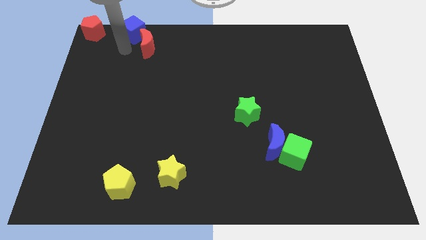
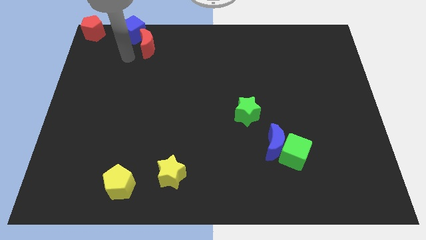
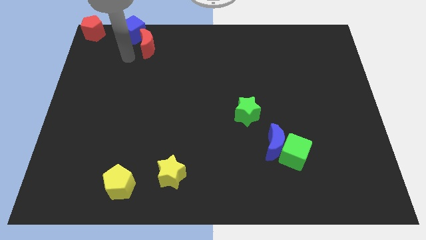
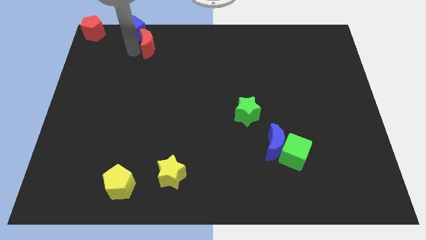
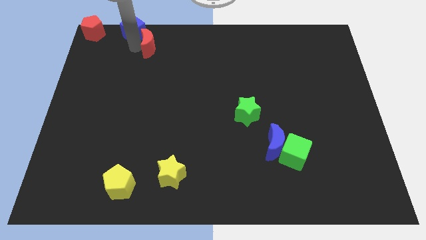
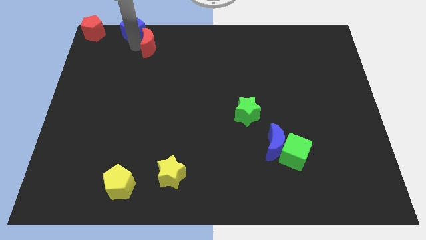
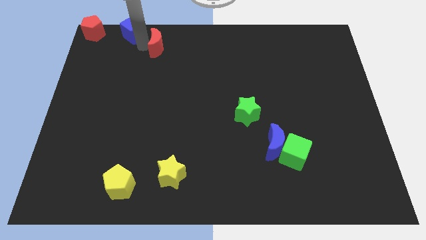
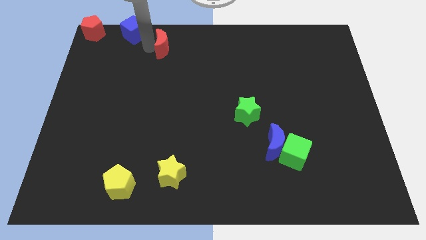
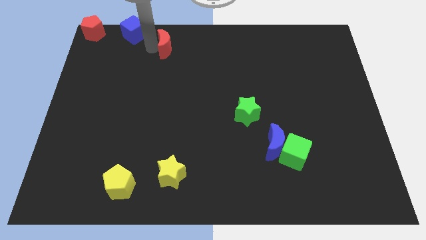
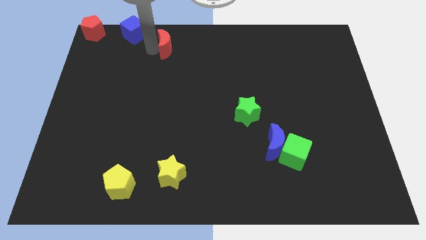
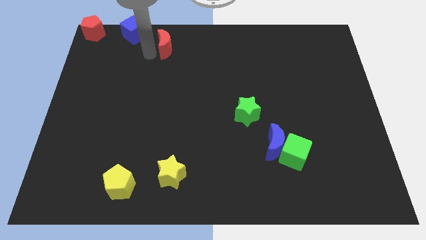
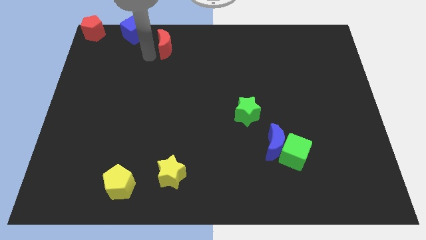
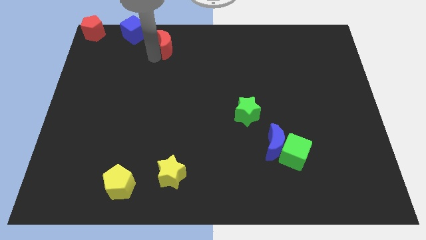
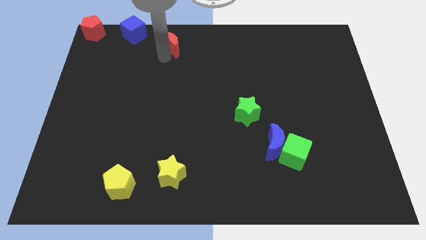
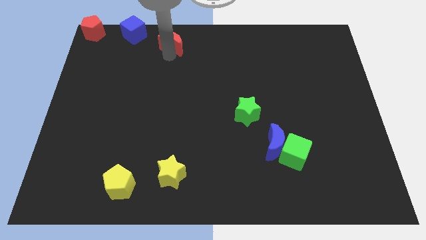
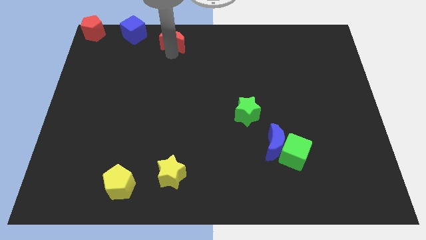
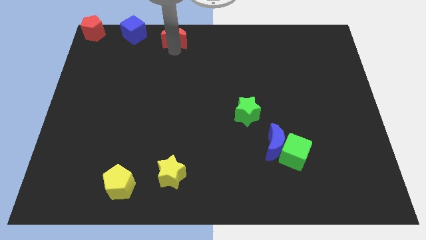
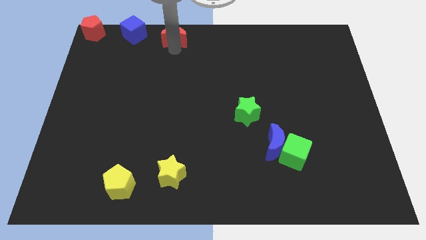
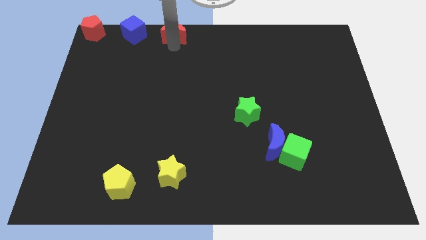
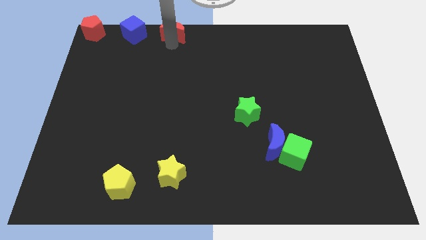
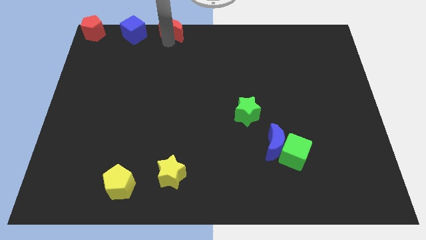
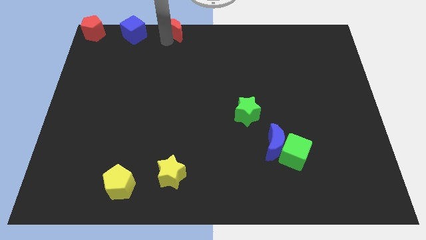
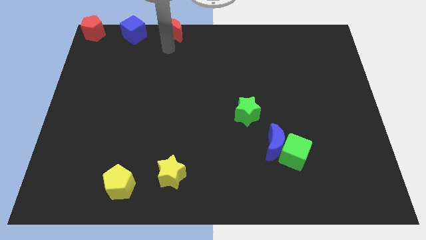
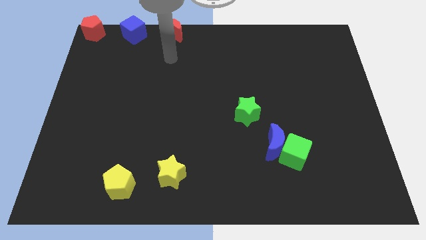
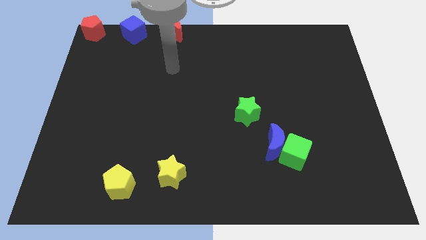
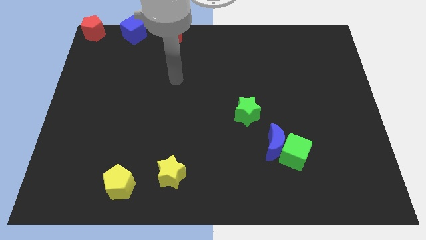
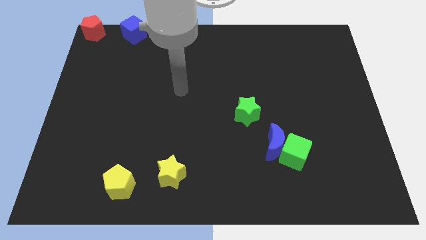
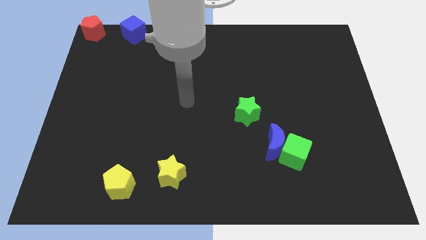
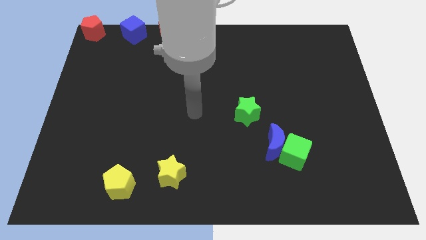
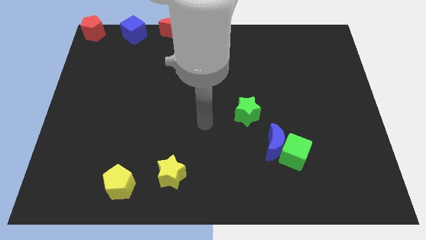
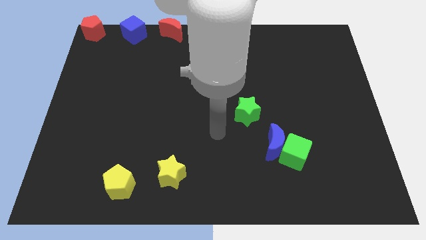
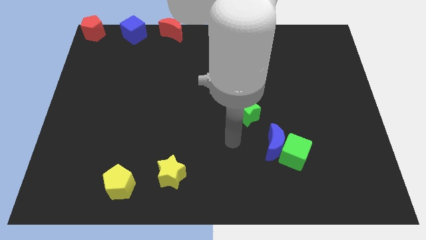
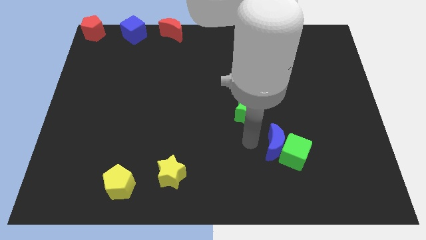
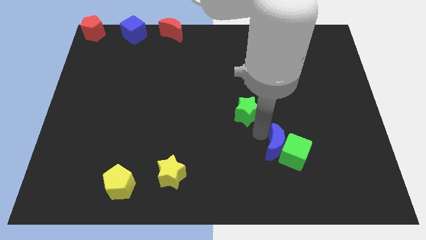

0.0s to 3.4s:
put the red moon to the right side of the blue cube

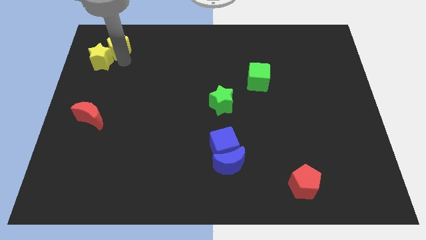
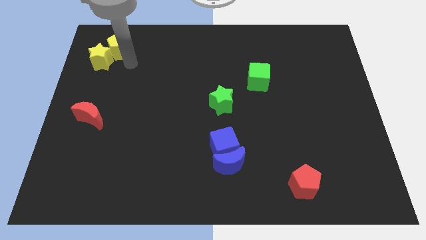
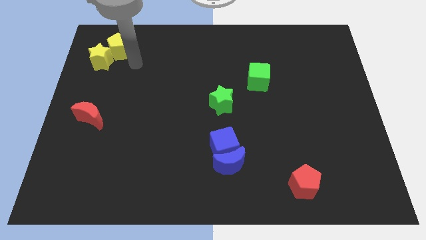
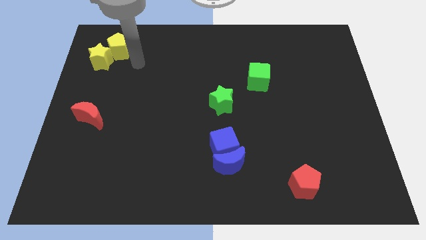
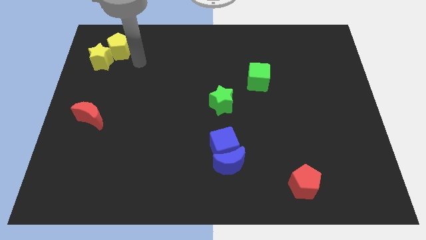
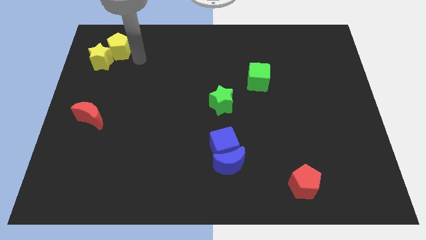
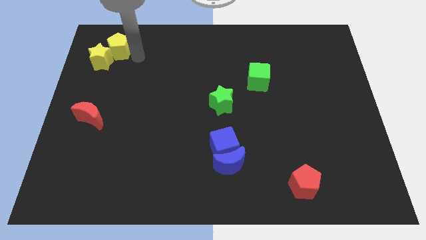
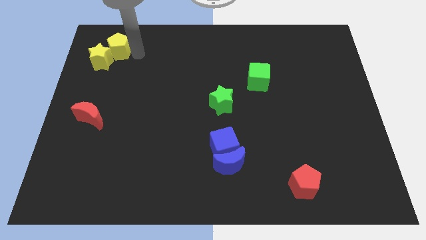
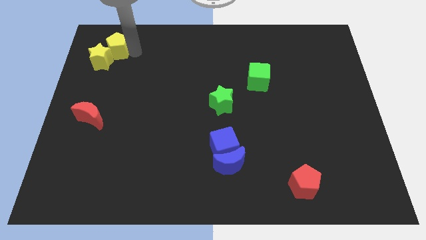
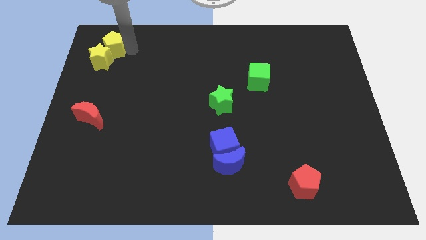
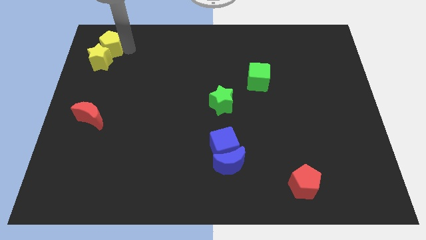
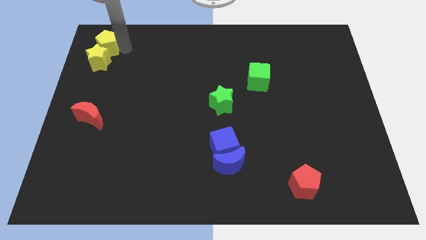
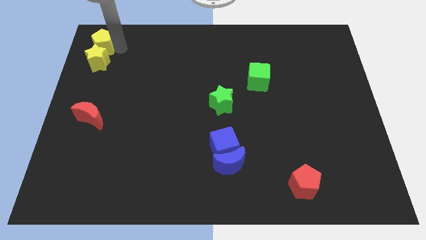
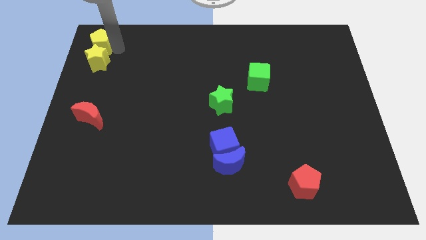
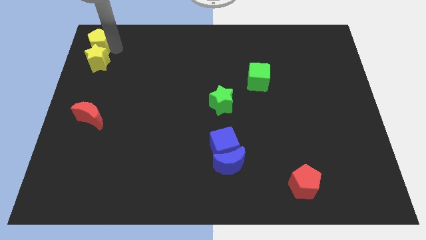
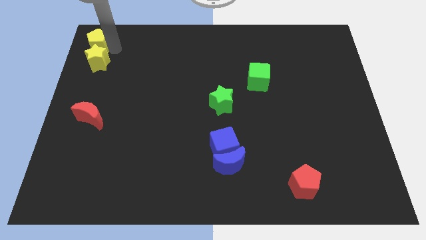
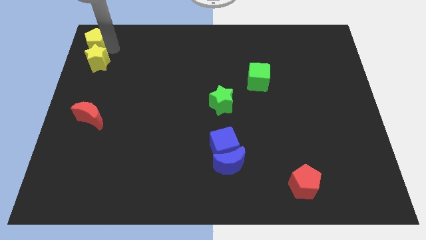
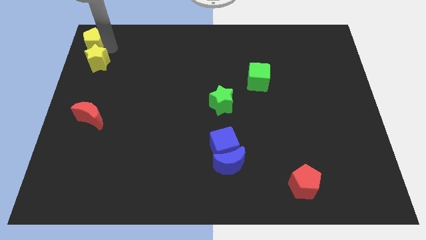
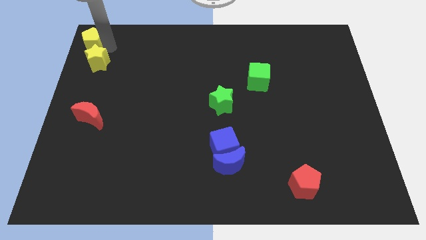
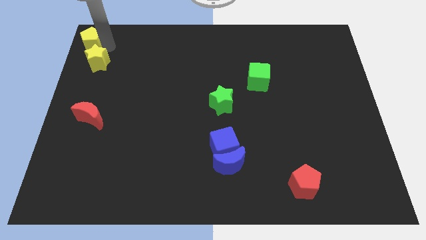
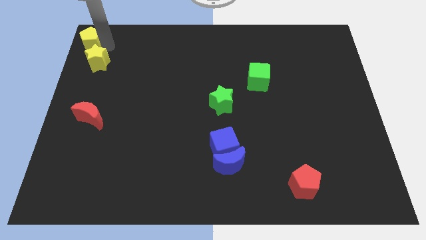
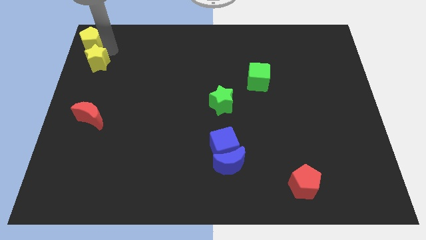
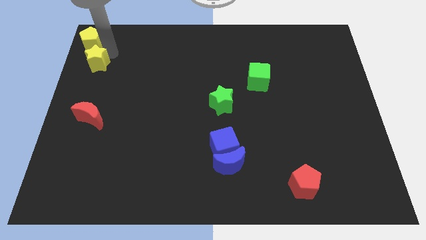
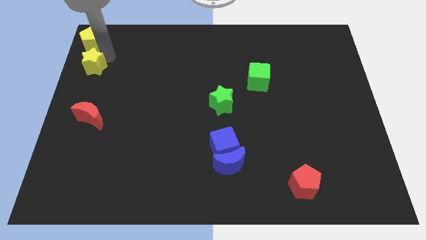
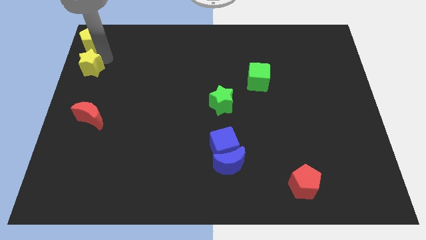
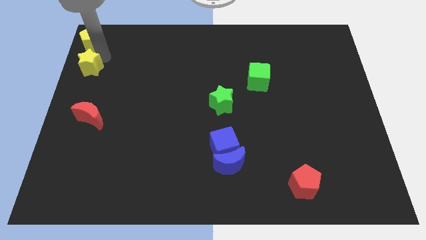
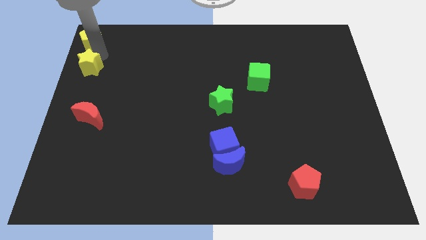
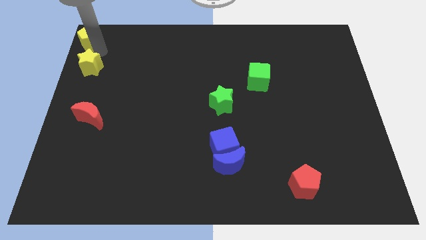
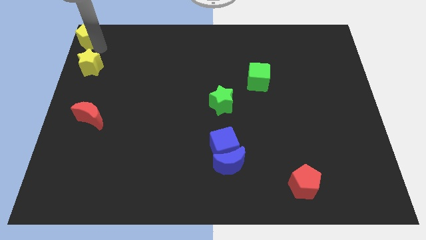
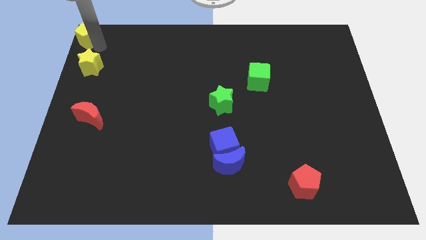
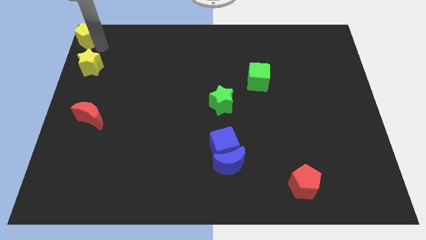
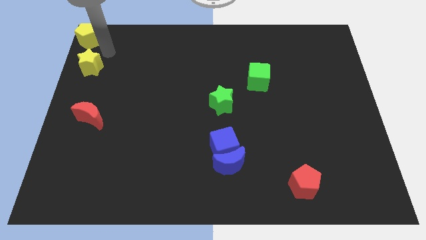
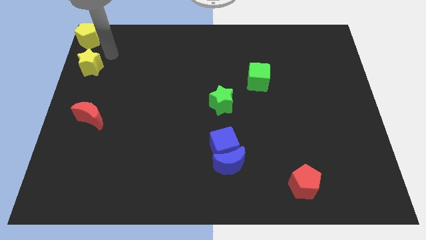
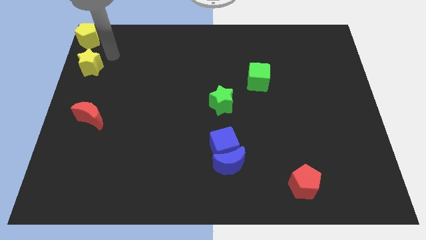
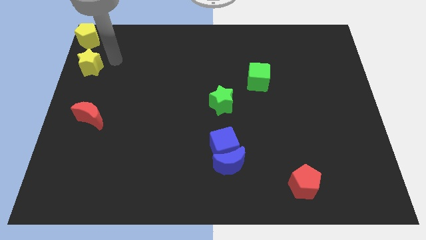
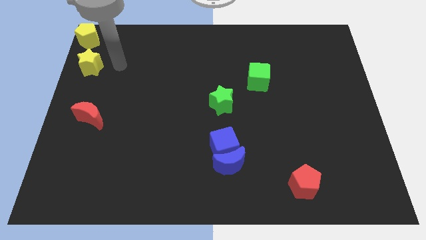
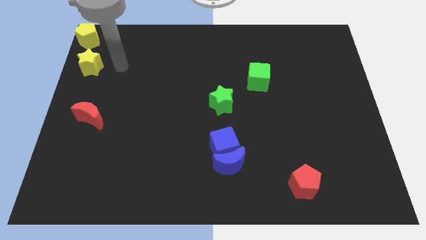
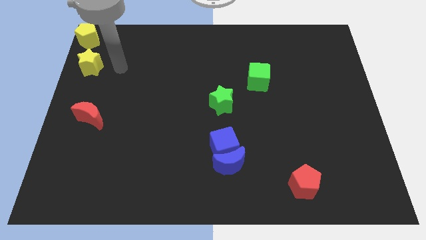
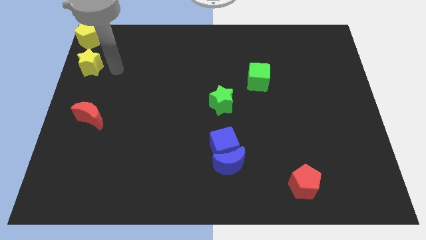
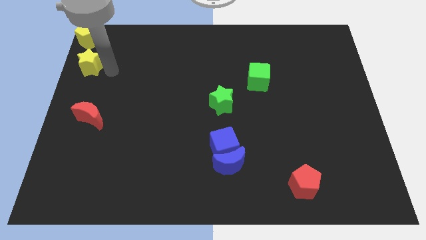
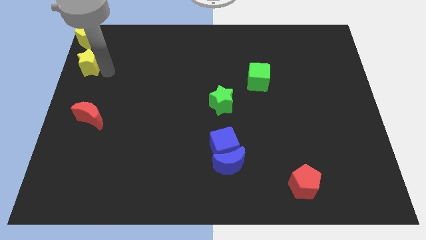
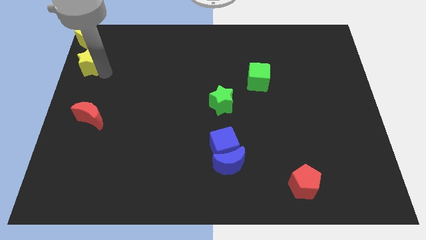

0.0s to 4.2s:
push the yellow pentagon to the top left corner of the board

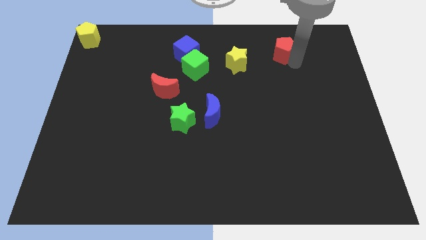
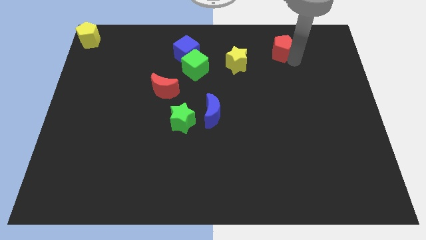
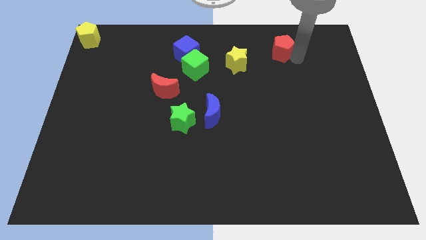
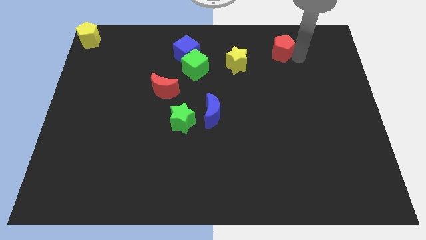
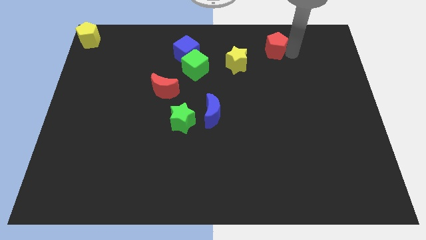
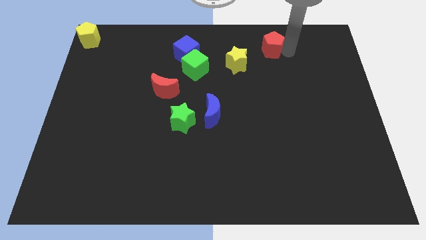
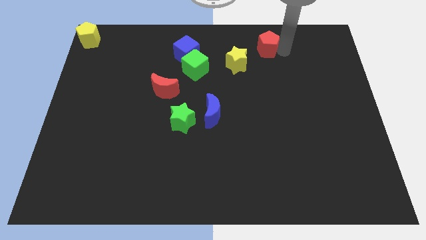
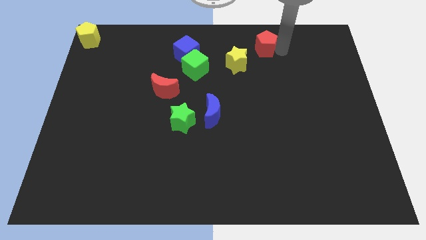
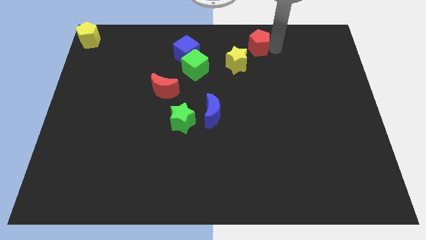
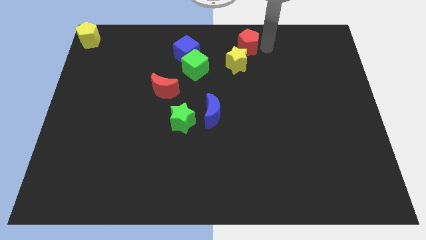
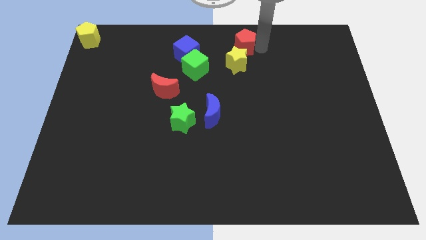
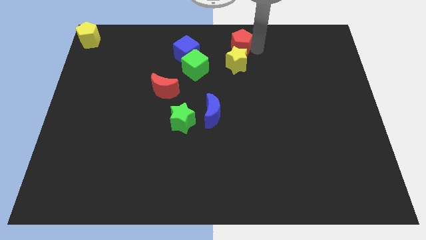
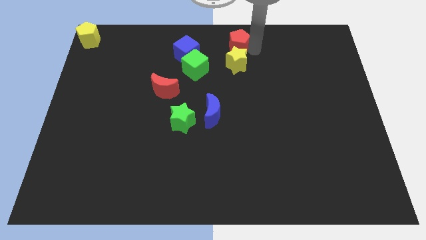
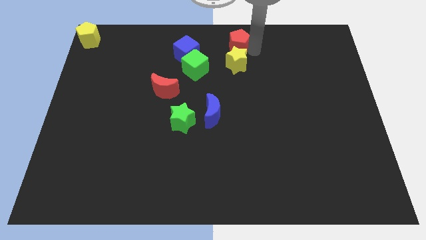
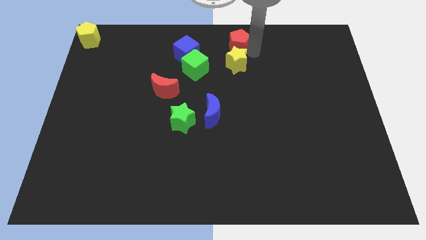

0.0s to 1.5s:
move the red pentagon above the yellow star
